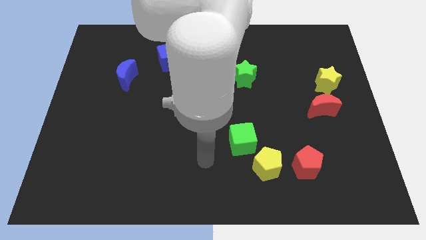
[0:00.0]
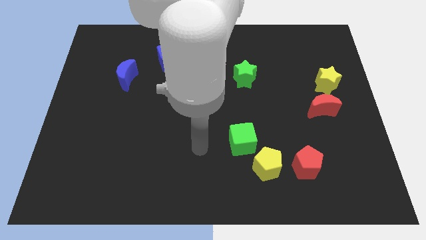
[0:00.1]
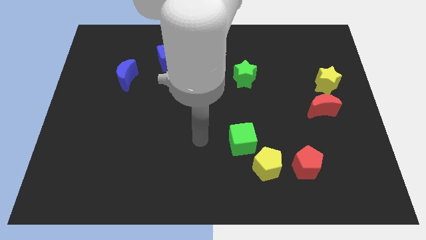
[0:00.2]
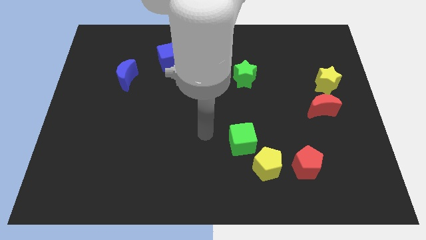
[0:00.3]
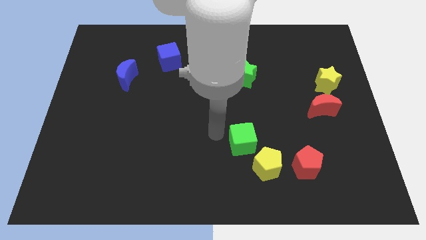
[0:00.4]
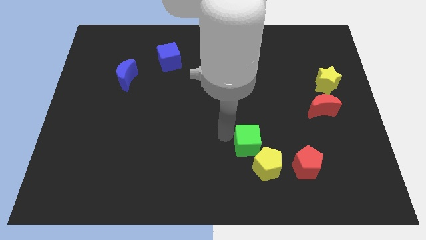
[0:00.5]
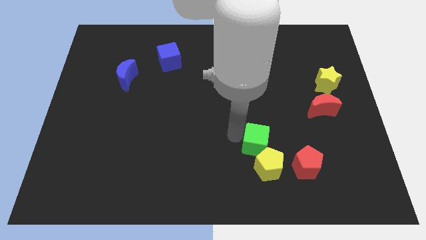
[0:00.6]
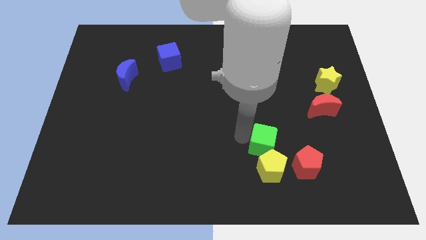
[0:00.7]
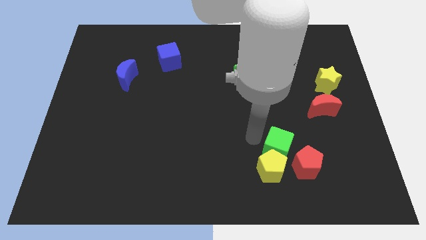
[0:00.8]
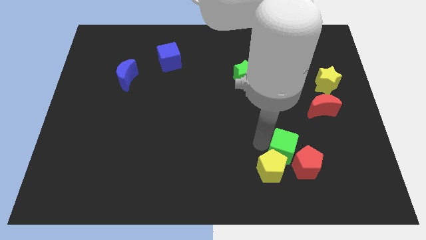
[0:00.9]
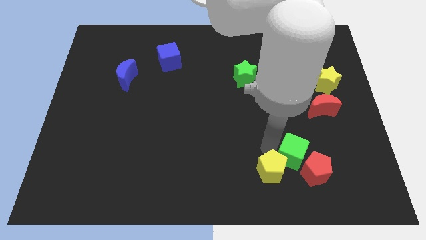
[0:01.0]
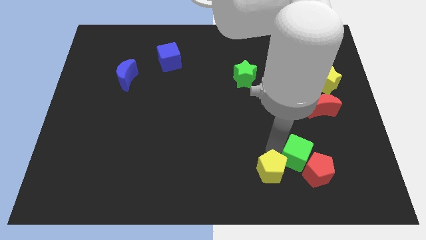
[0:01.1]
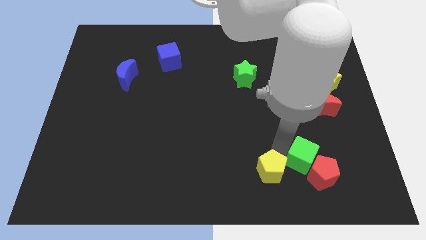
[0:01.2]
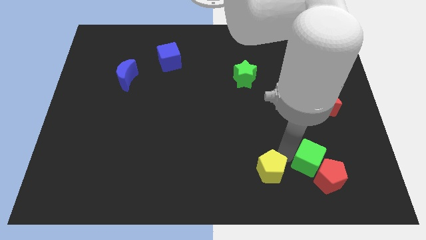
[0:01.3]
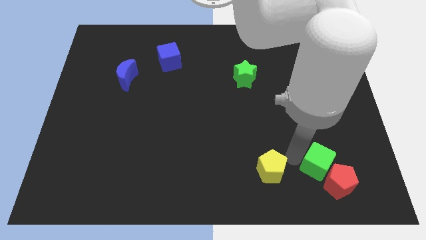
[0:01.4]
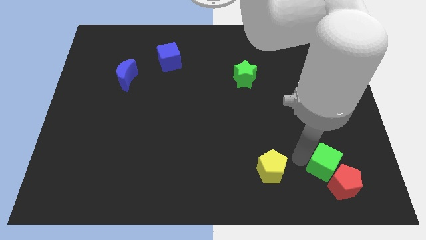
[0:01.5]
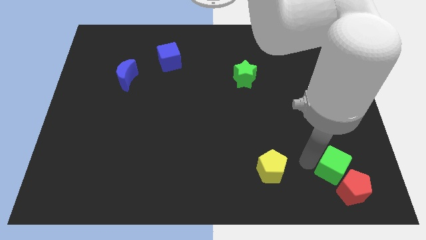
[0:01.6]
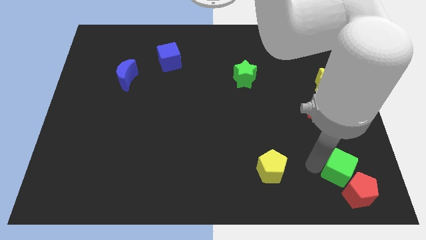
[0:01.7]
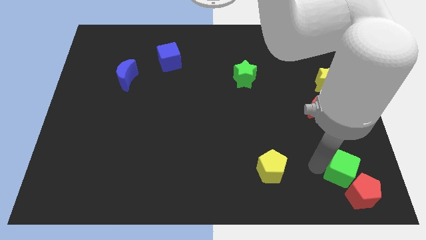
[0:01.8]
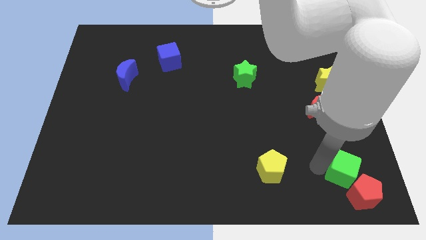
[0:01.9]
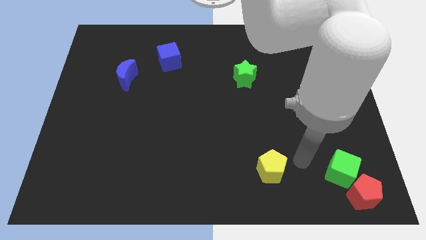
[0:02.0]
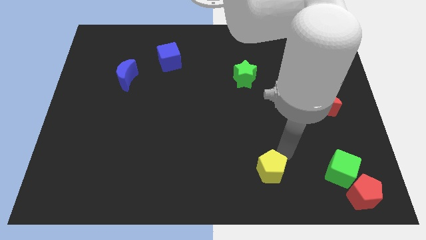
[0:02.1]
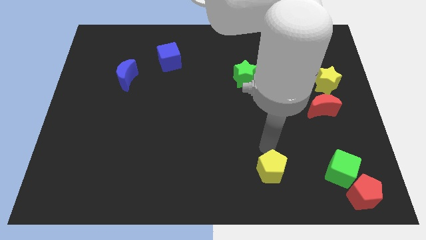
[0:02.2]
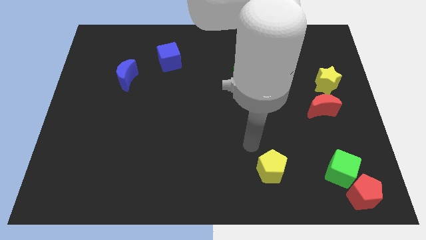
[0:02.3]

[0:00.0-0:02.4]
push green cube into the red pentagon

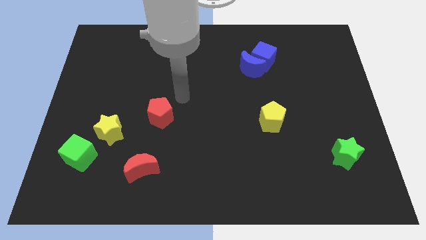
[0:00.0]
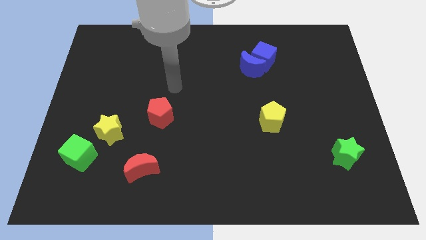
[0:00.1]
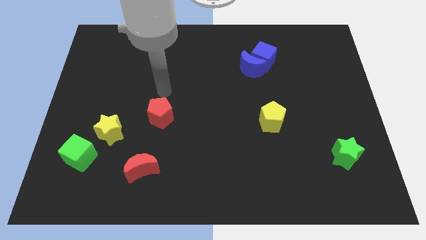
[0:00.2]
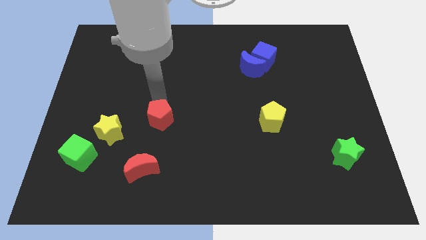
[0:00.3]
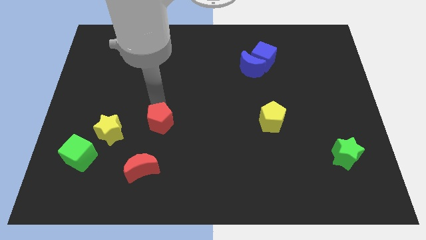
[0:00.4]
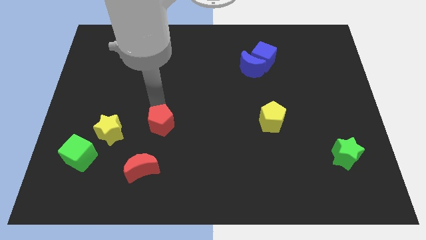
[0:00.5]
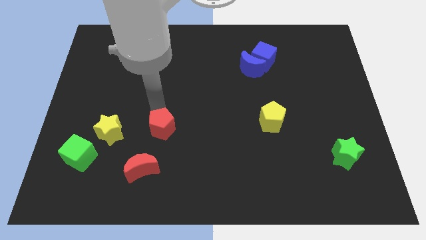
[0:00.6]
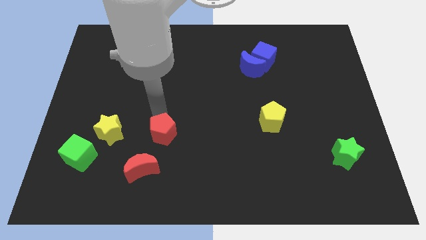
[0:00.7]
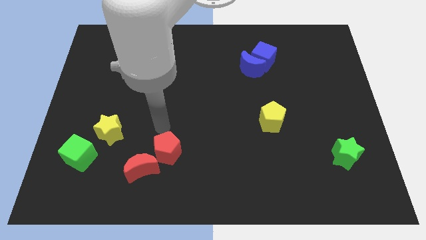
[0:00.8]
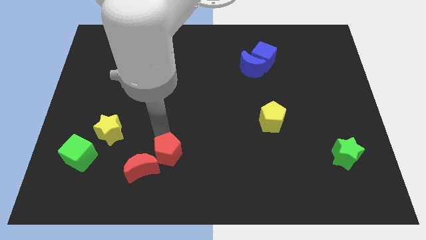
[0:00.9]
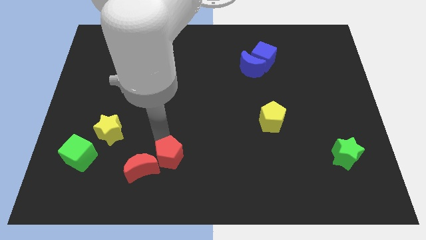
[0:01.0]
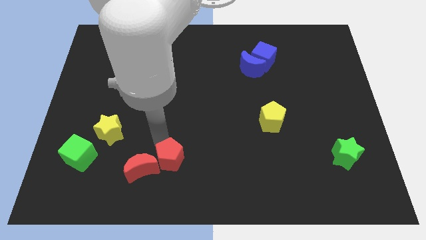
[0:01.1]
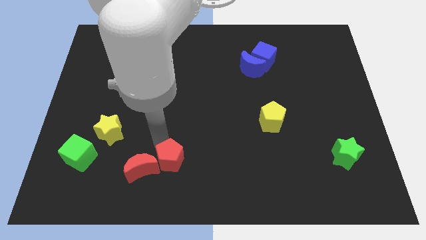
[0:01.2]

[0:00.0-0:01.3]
put the red pentagon right to the red moon

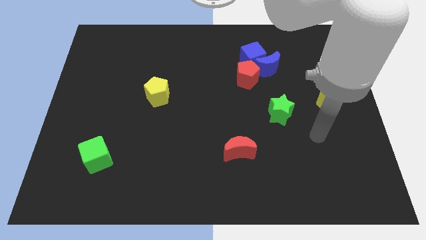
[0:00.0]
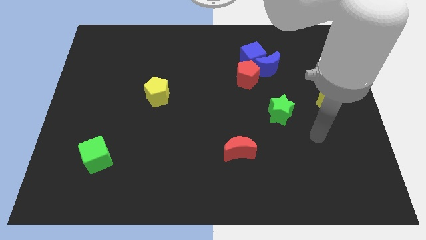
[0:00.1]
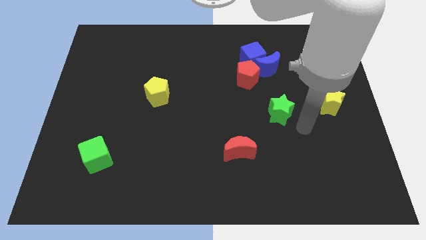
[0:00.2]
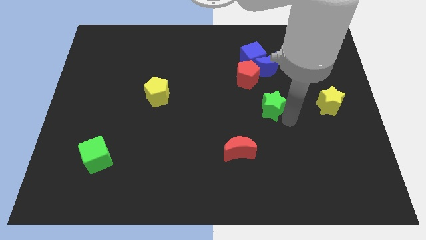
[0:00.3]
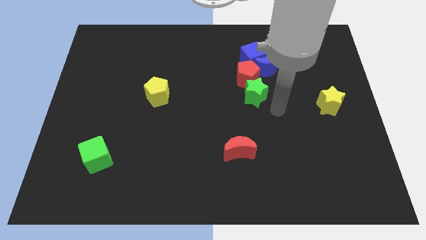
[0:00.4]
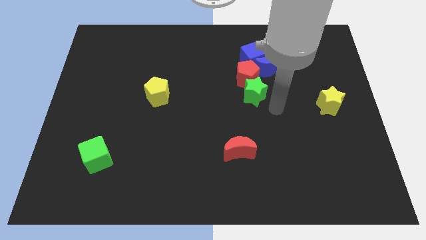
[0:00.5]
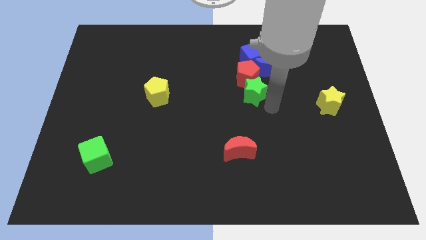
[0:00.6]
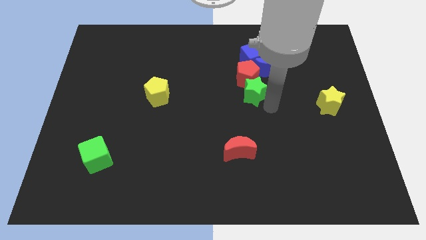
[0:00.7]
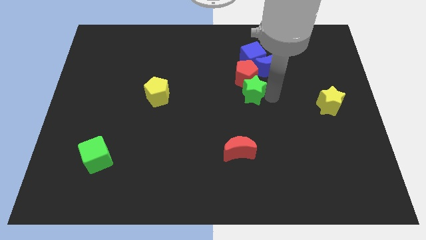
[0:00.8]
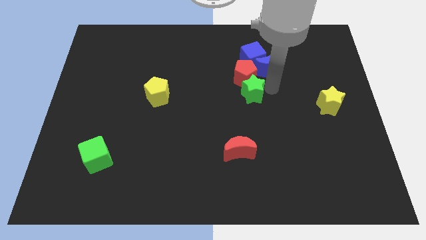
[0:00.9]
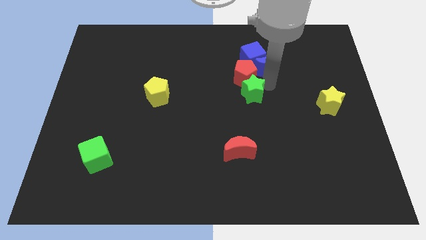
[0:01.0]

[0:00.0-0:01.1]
push the green star towards the red pentagon

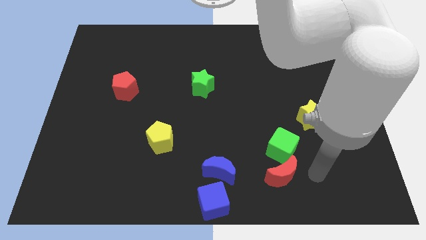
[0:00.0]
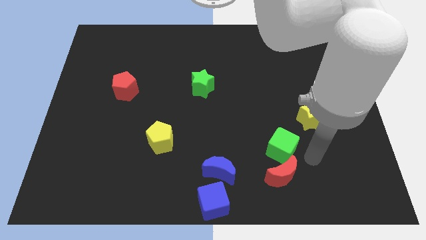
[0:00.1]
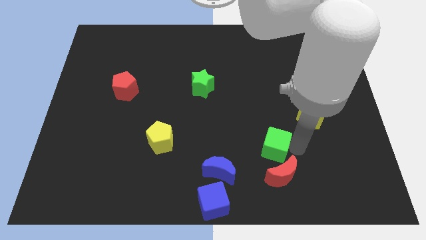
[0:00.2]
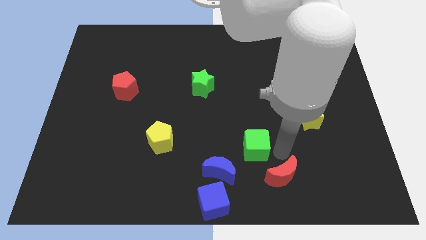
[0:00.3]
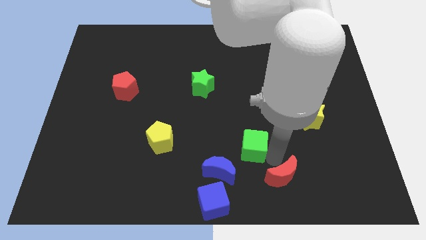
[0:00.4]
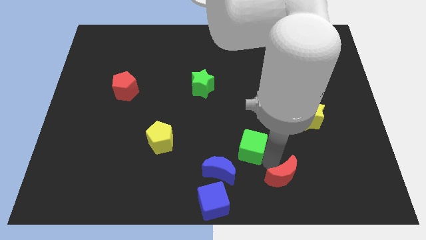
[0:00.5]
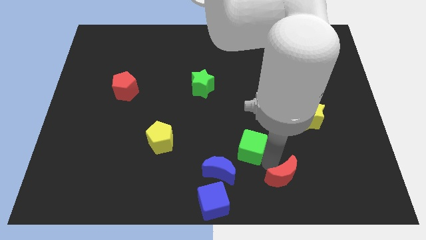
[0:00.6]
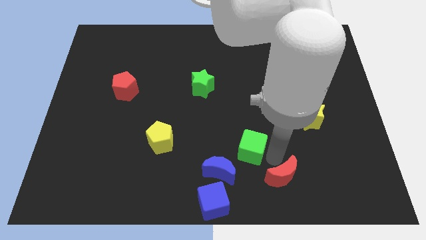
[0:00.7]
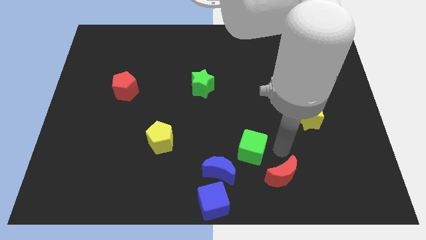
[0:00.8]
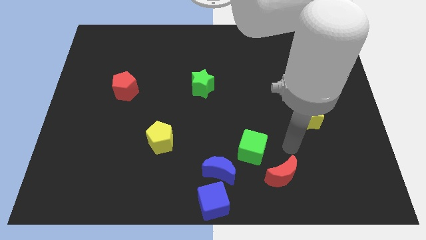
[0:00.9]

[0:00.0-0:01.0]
separate green cube from red moon

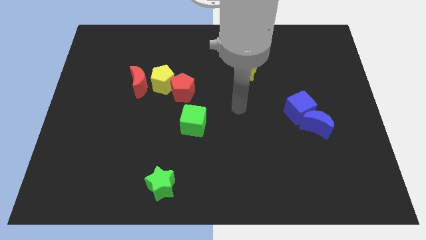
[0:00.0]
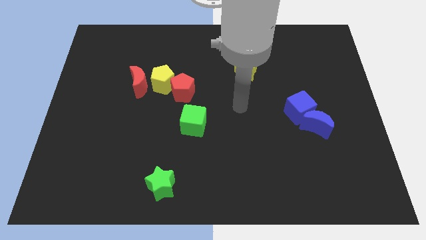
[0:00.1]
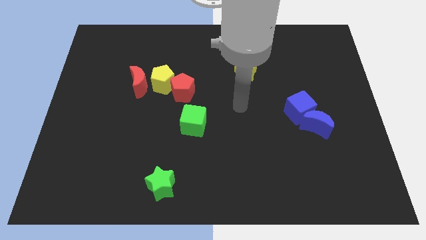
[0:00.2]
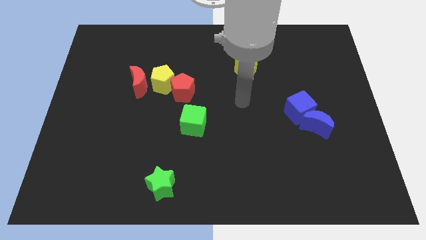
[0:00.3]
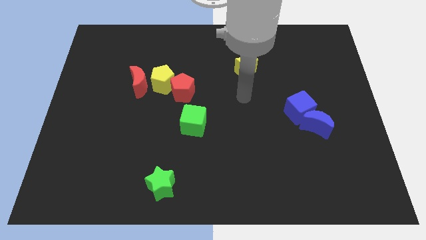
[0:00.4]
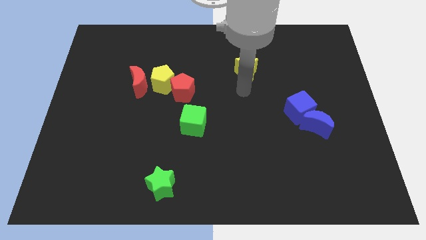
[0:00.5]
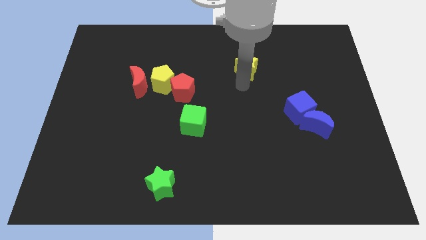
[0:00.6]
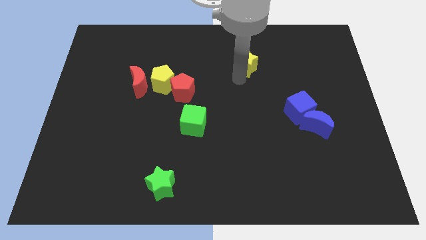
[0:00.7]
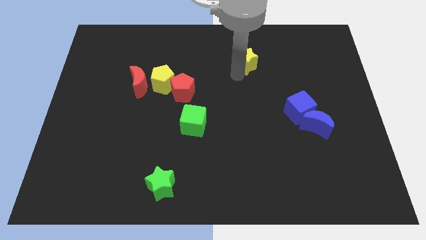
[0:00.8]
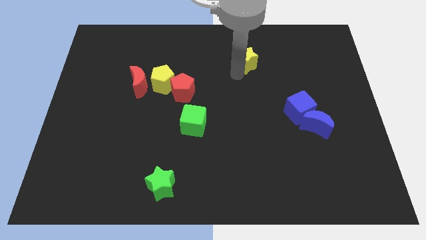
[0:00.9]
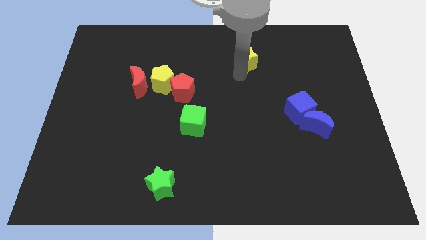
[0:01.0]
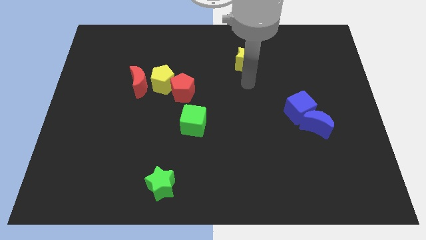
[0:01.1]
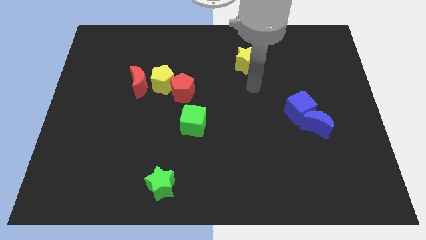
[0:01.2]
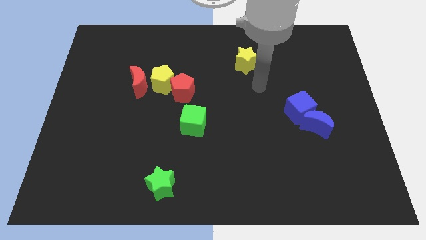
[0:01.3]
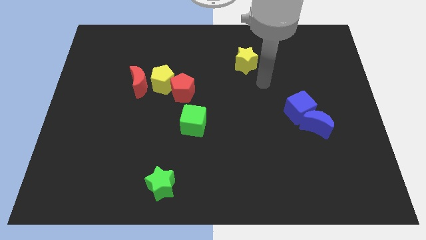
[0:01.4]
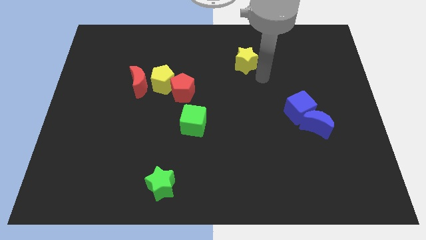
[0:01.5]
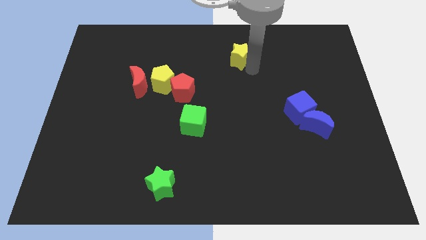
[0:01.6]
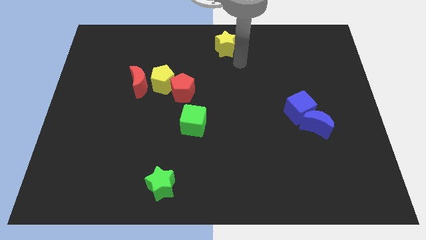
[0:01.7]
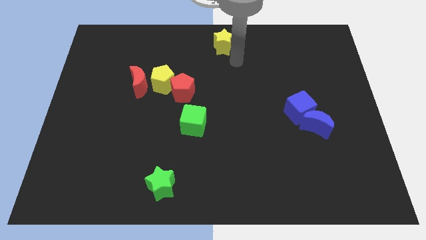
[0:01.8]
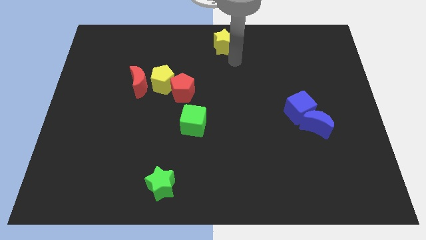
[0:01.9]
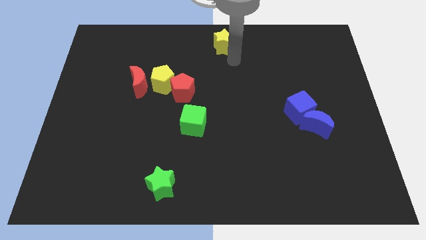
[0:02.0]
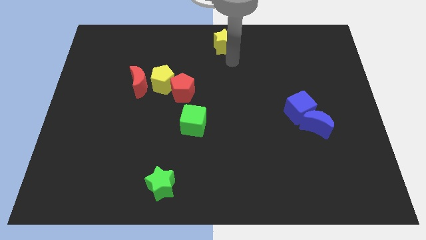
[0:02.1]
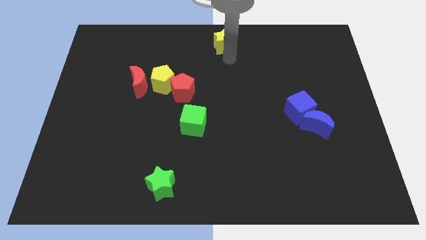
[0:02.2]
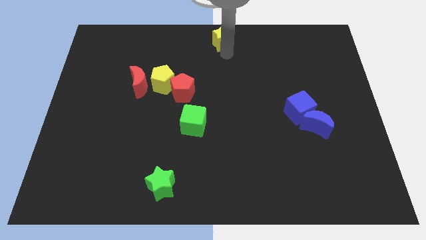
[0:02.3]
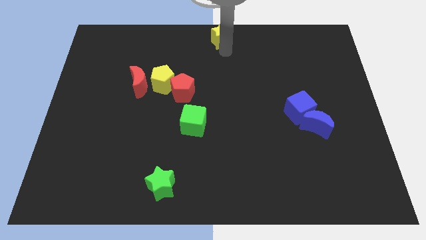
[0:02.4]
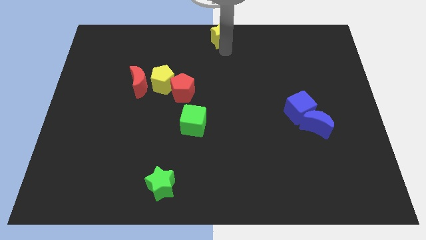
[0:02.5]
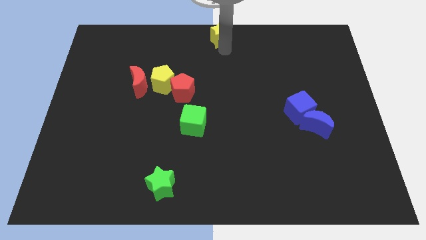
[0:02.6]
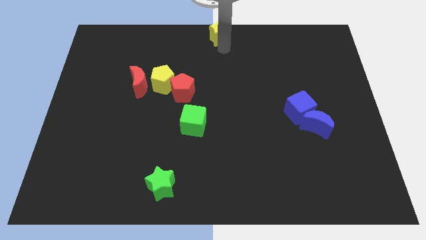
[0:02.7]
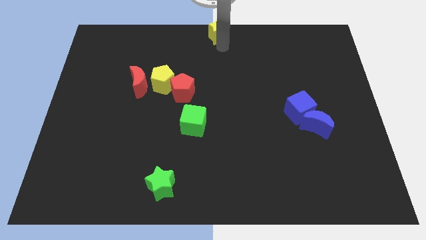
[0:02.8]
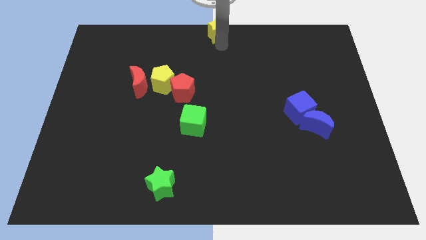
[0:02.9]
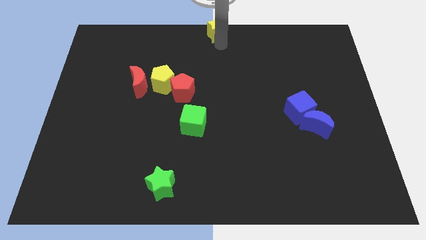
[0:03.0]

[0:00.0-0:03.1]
move yellow star to top centre of the board

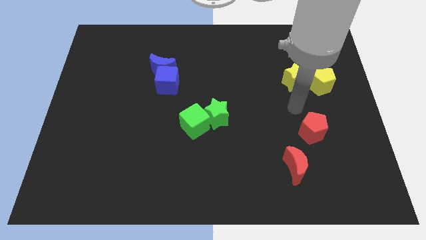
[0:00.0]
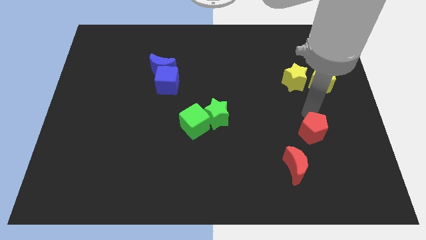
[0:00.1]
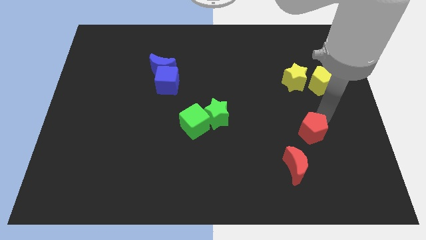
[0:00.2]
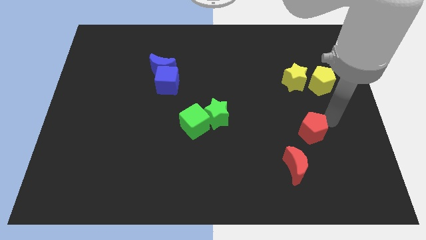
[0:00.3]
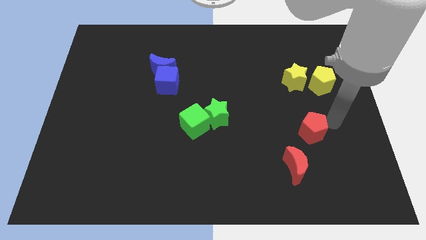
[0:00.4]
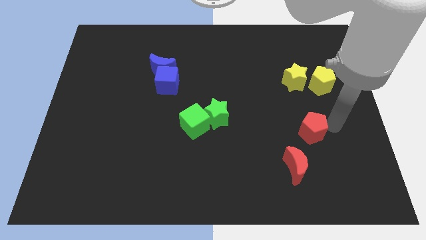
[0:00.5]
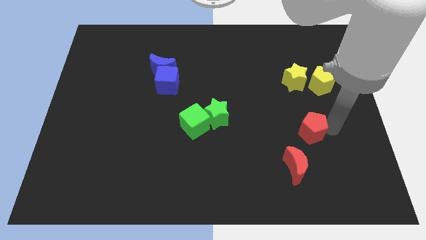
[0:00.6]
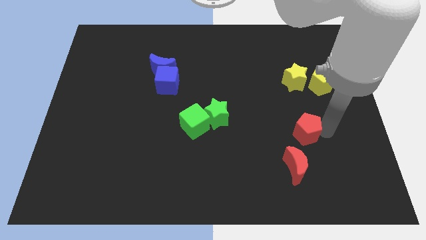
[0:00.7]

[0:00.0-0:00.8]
move your arm away from the yellow star
